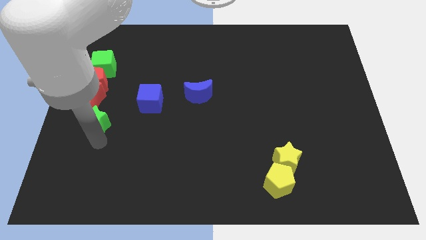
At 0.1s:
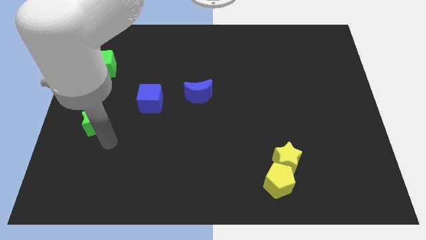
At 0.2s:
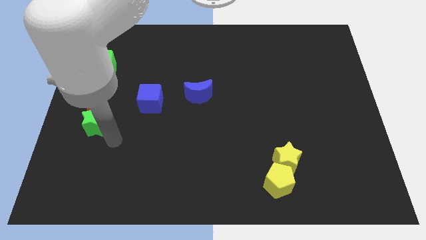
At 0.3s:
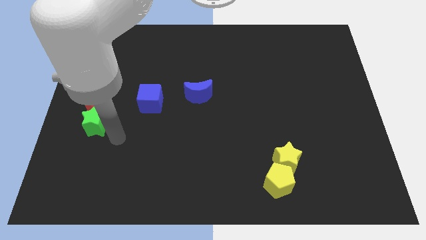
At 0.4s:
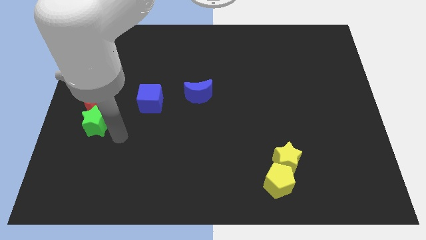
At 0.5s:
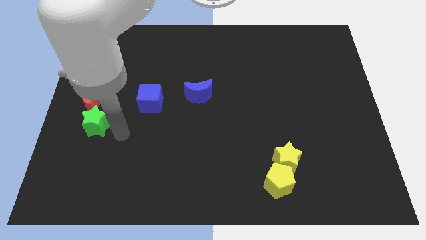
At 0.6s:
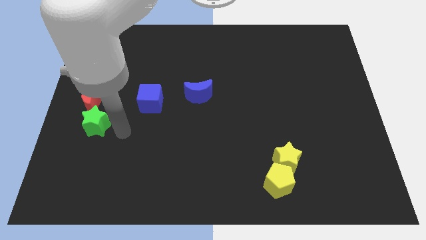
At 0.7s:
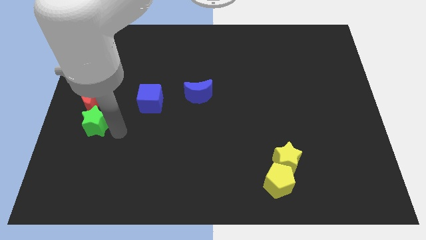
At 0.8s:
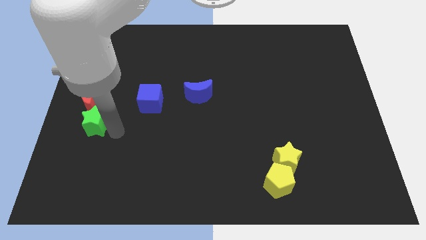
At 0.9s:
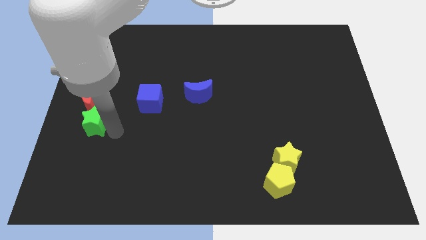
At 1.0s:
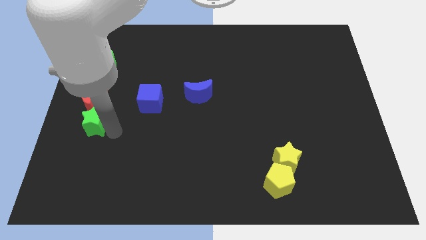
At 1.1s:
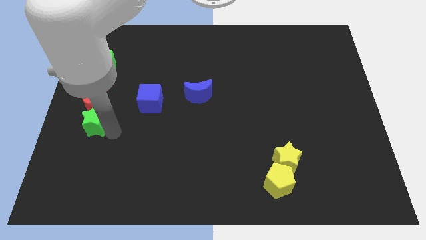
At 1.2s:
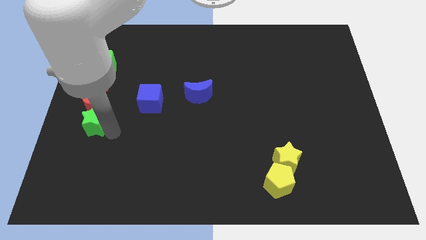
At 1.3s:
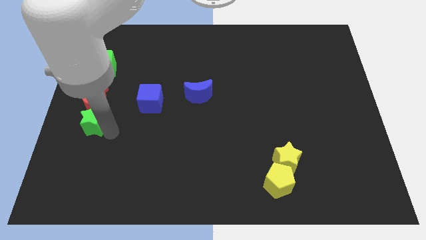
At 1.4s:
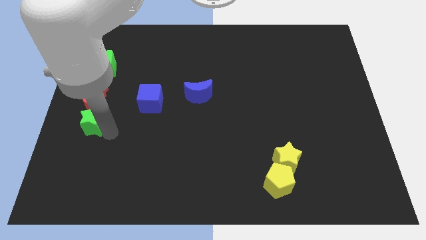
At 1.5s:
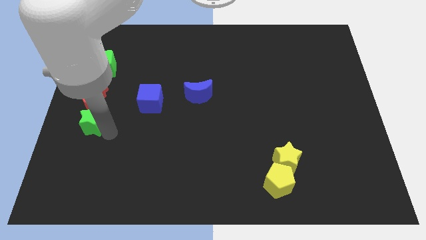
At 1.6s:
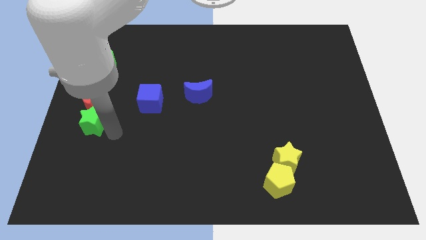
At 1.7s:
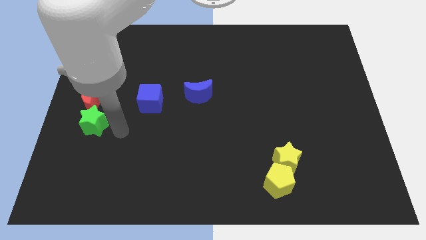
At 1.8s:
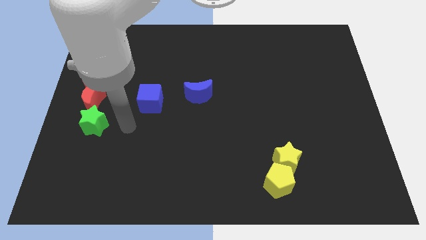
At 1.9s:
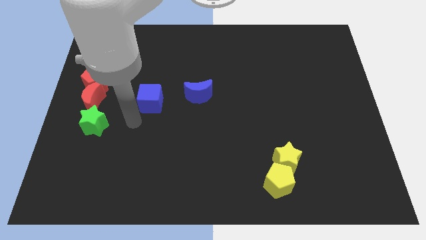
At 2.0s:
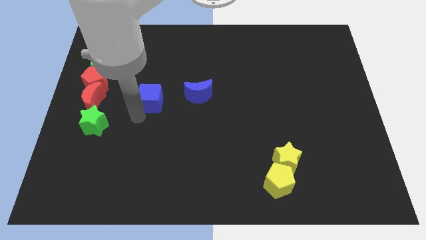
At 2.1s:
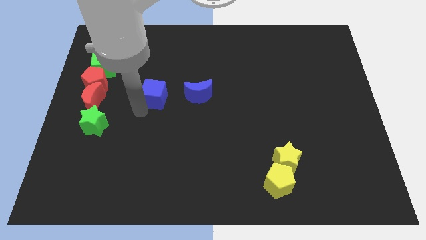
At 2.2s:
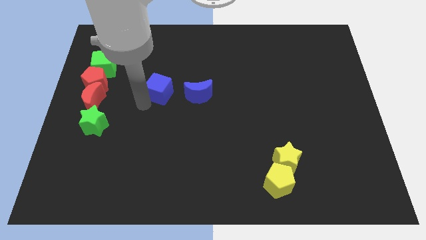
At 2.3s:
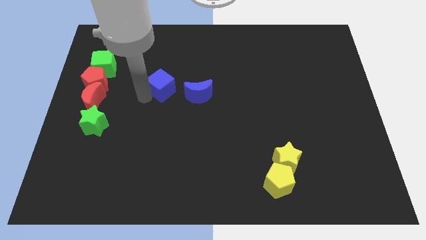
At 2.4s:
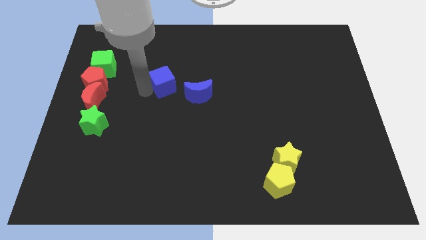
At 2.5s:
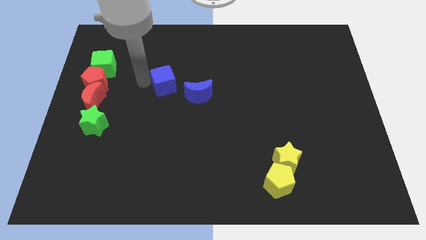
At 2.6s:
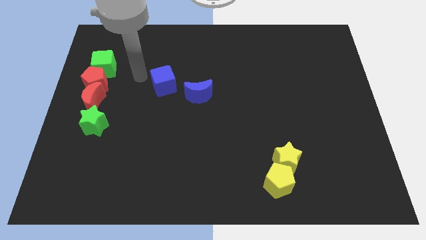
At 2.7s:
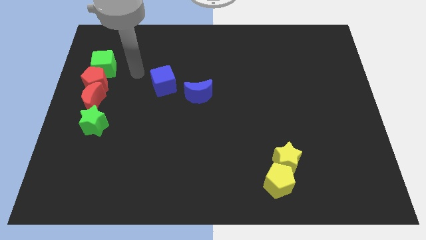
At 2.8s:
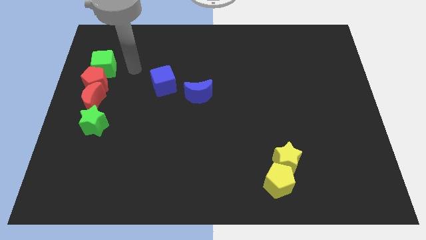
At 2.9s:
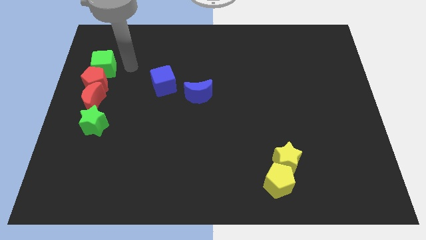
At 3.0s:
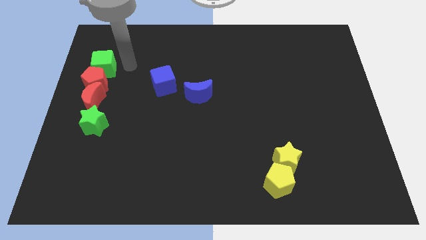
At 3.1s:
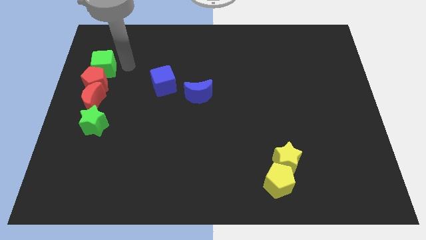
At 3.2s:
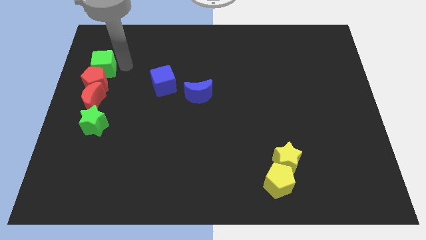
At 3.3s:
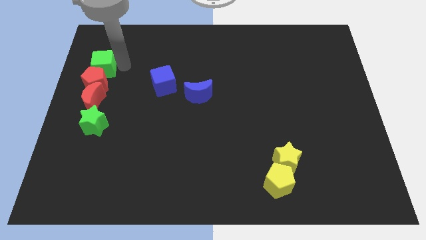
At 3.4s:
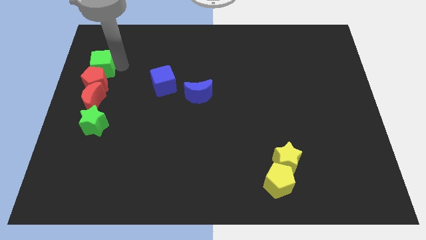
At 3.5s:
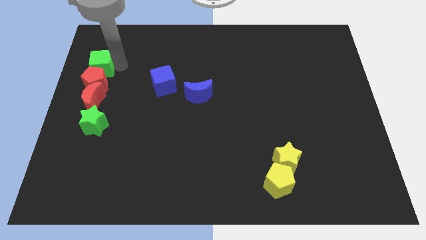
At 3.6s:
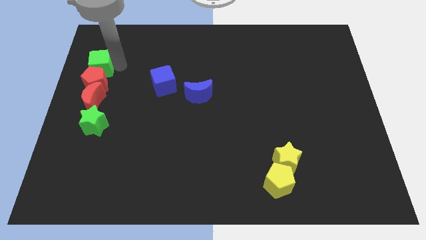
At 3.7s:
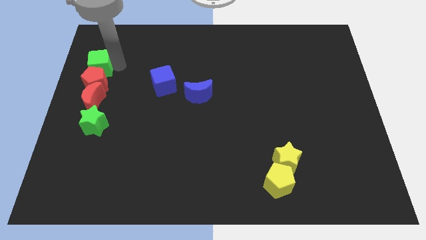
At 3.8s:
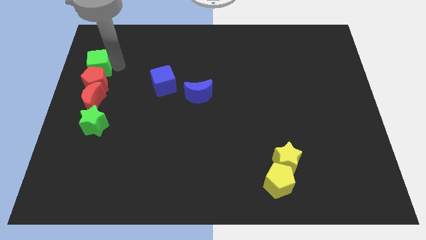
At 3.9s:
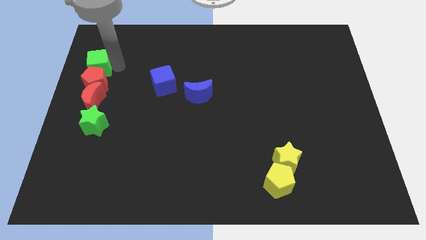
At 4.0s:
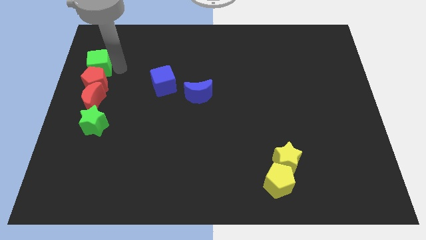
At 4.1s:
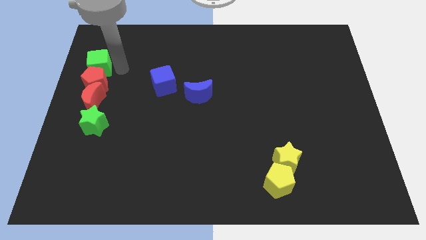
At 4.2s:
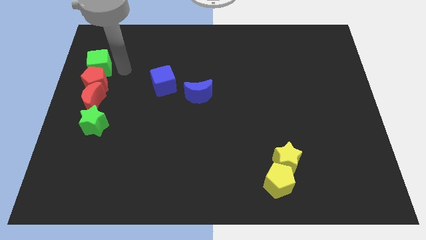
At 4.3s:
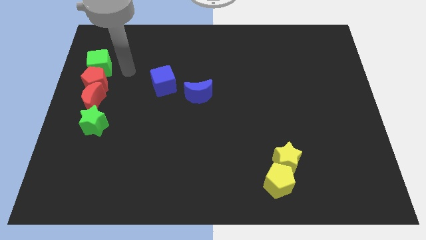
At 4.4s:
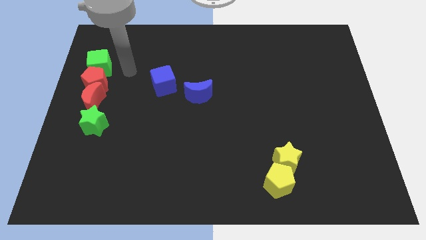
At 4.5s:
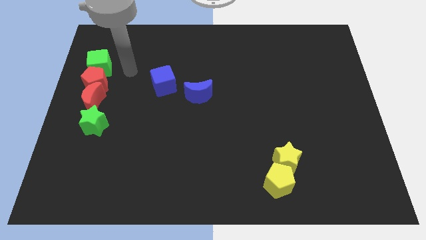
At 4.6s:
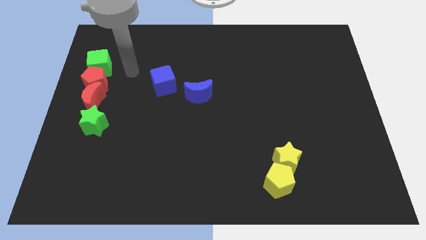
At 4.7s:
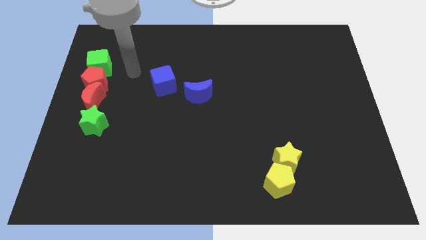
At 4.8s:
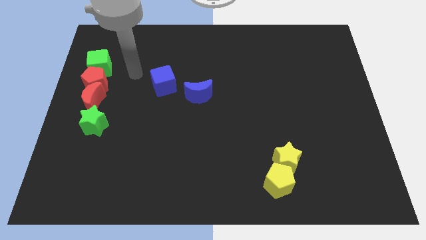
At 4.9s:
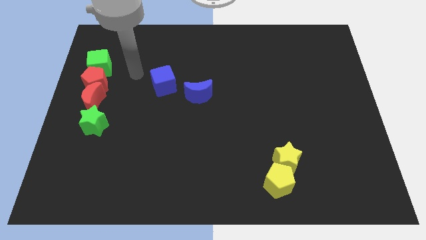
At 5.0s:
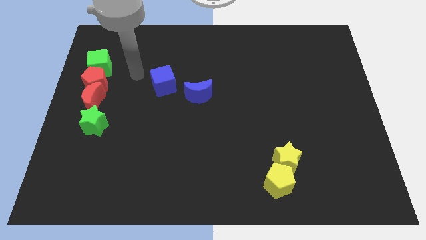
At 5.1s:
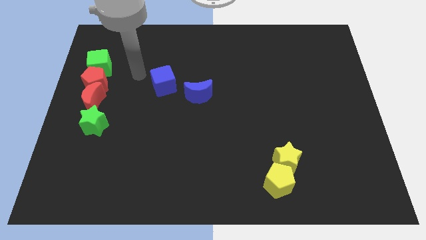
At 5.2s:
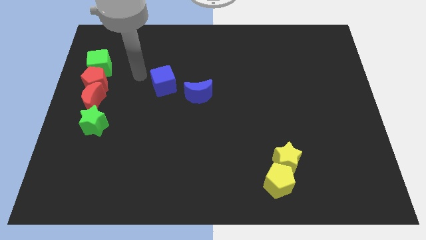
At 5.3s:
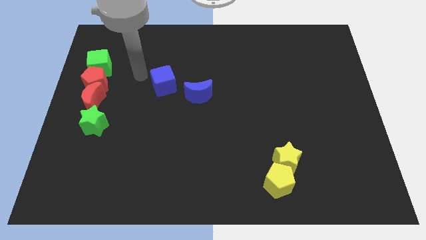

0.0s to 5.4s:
move the green cube slightly to the top side of the red pentagon

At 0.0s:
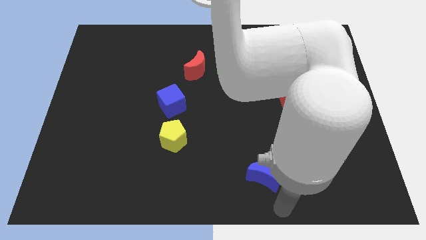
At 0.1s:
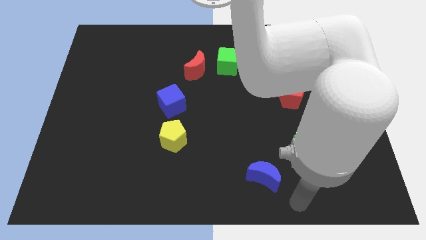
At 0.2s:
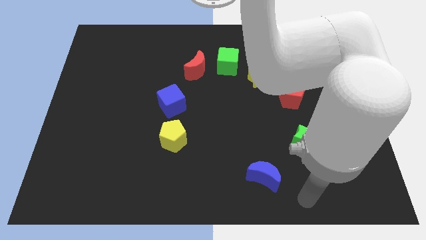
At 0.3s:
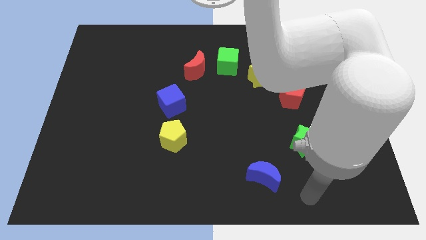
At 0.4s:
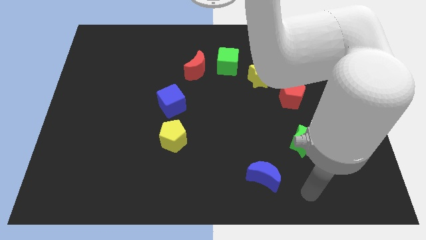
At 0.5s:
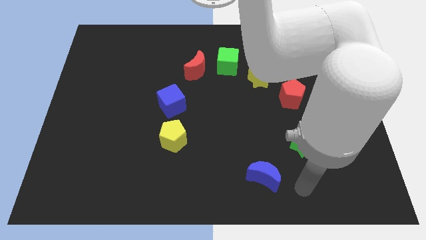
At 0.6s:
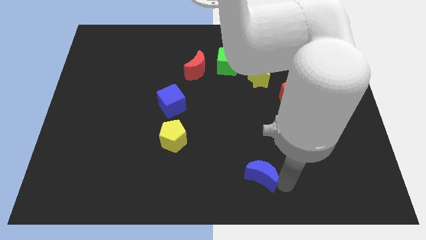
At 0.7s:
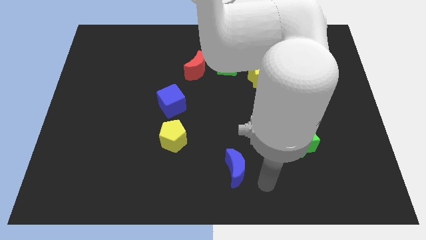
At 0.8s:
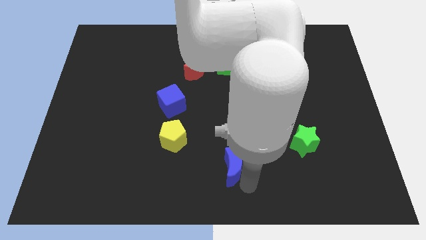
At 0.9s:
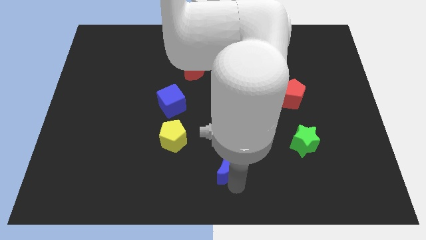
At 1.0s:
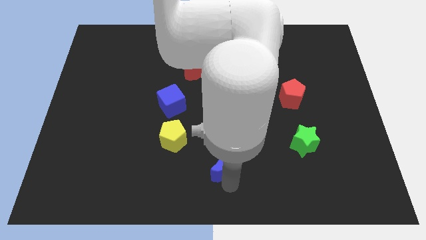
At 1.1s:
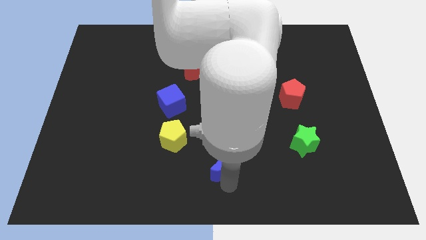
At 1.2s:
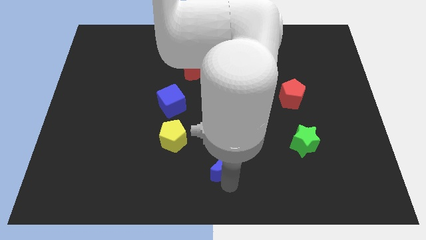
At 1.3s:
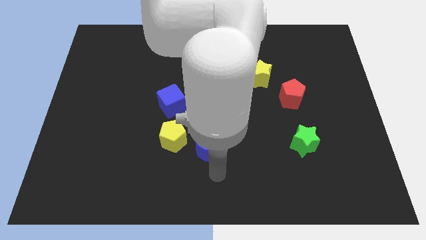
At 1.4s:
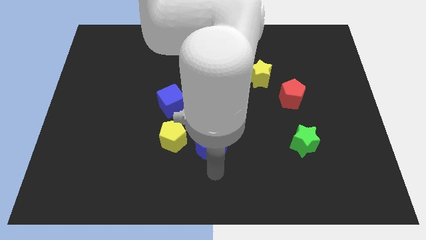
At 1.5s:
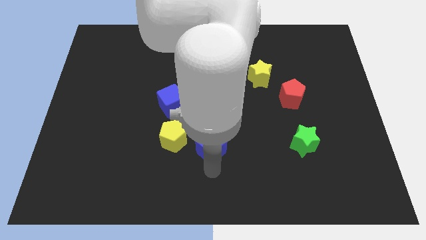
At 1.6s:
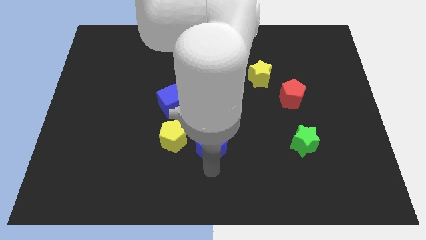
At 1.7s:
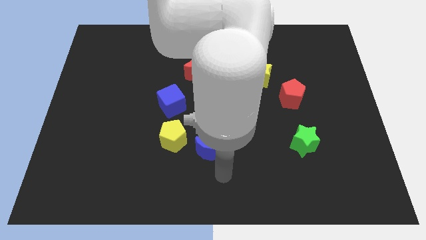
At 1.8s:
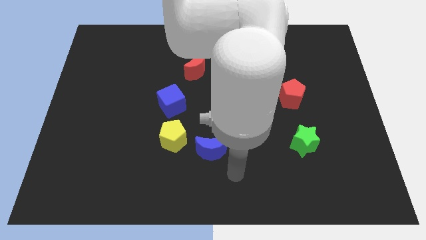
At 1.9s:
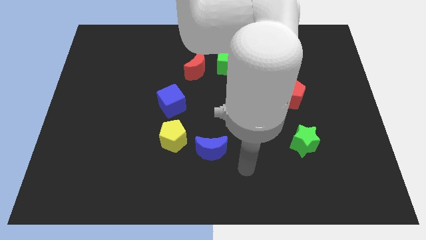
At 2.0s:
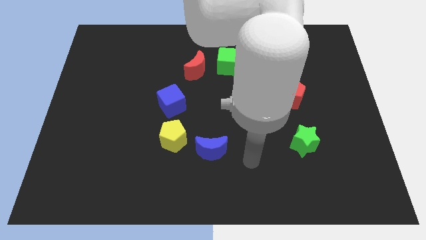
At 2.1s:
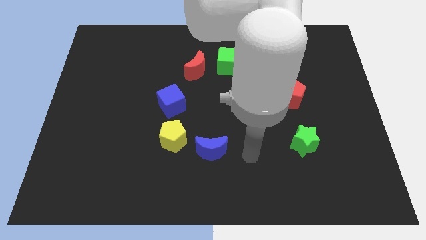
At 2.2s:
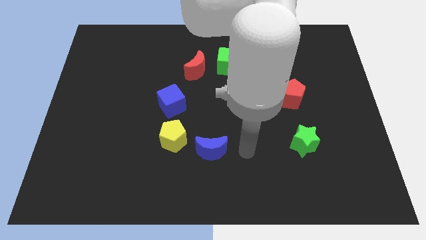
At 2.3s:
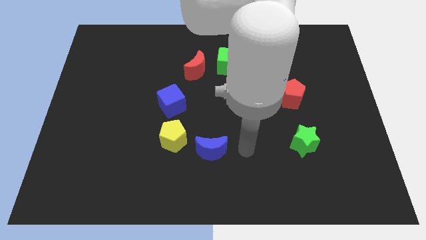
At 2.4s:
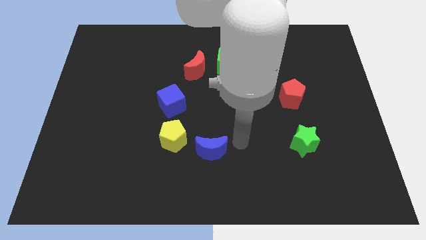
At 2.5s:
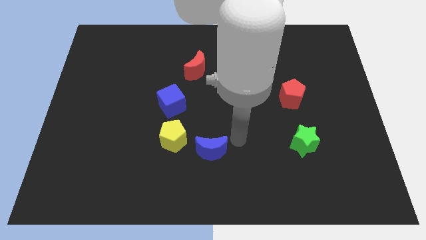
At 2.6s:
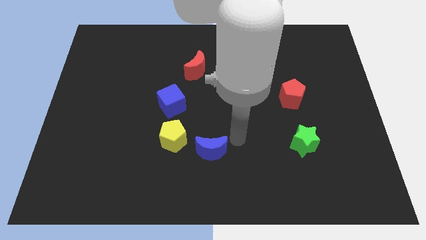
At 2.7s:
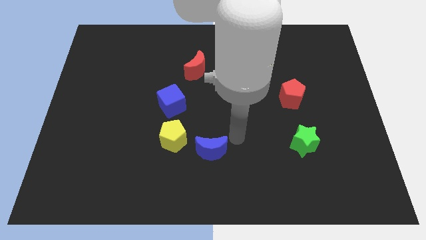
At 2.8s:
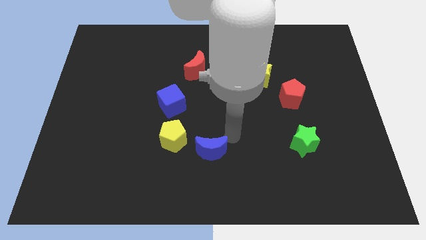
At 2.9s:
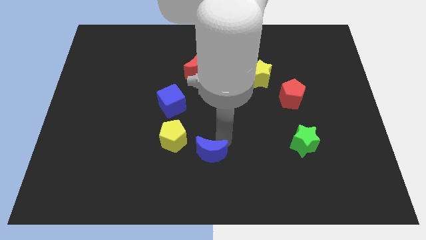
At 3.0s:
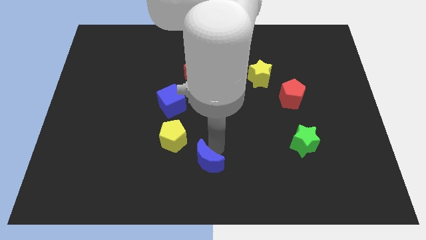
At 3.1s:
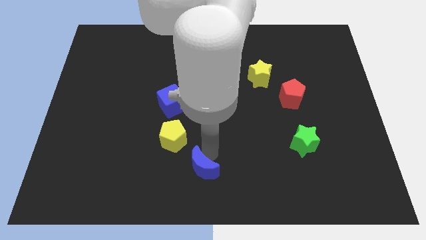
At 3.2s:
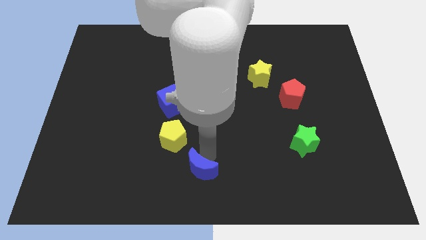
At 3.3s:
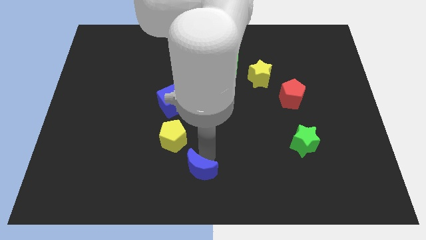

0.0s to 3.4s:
move red crescent diagonally towards yellow pentagon
